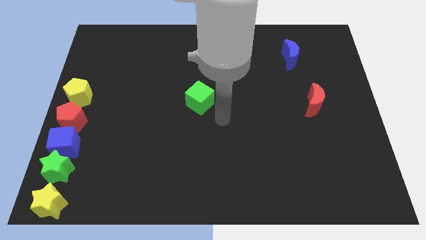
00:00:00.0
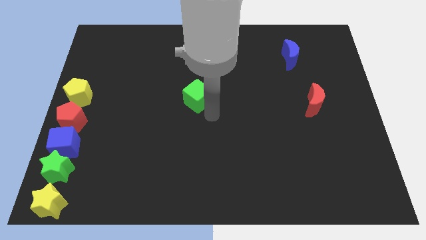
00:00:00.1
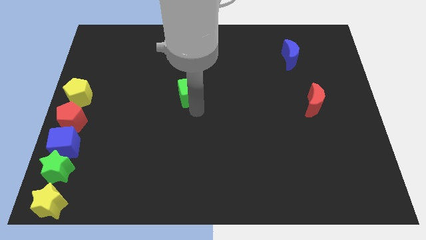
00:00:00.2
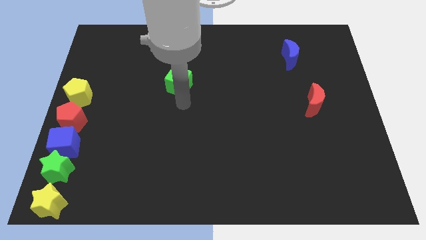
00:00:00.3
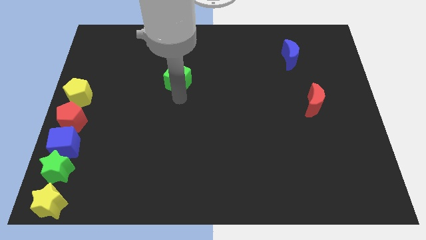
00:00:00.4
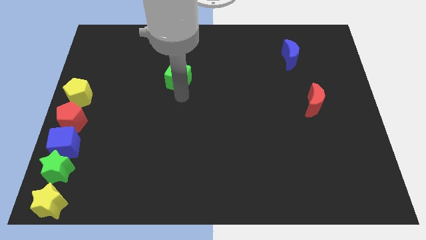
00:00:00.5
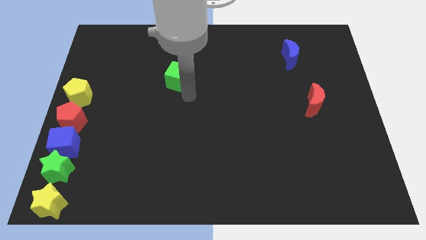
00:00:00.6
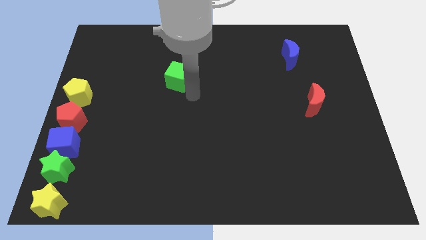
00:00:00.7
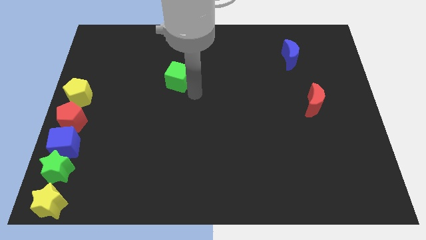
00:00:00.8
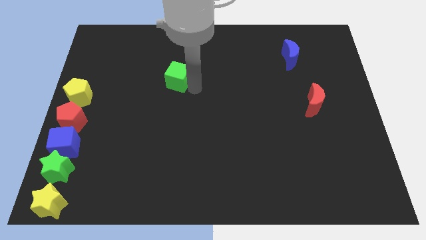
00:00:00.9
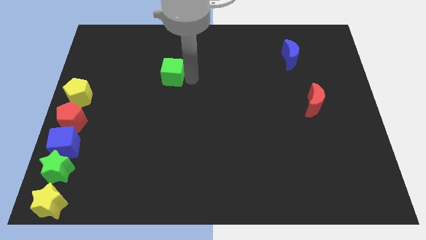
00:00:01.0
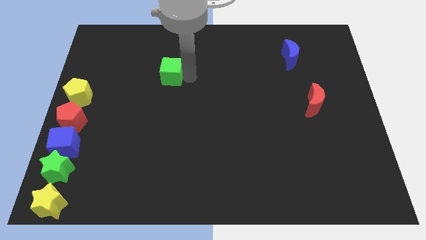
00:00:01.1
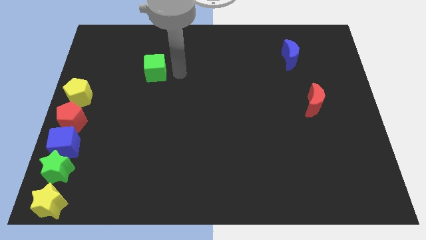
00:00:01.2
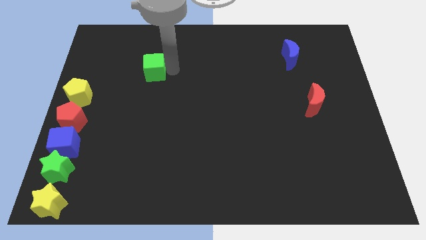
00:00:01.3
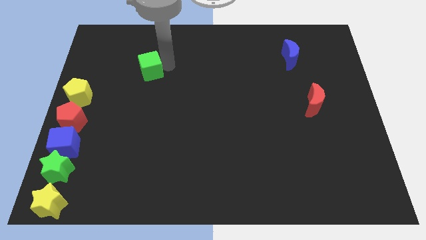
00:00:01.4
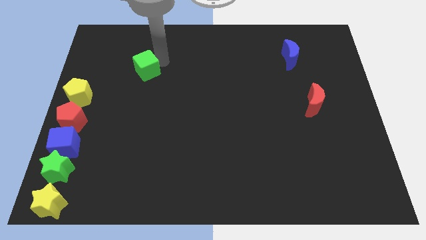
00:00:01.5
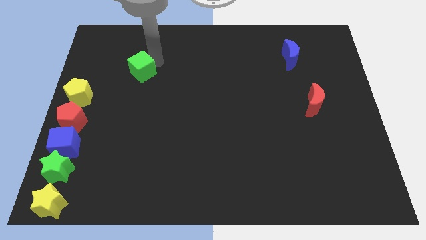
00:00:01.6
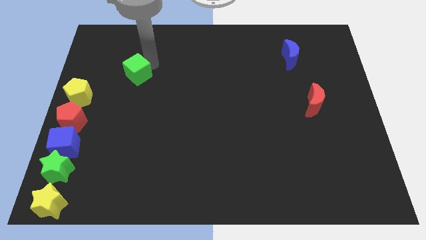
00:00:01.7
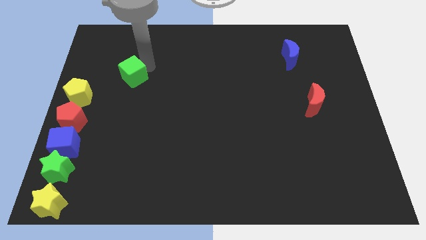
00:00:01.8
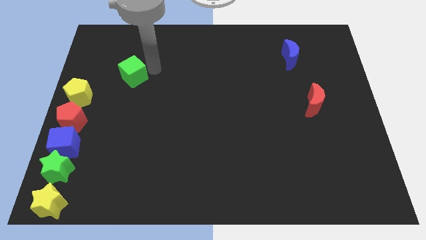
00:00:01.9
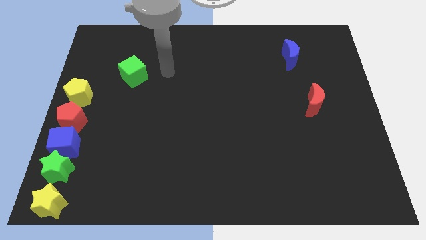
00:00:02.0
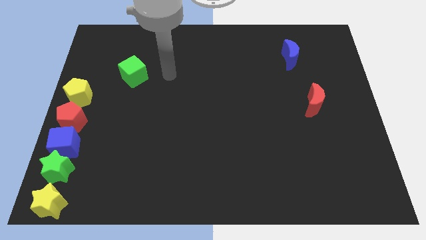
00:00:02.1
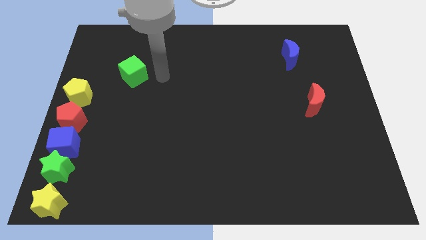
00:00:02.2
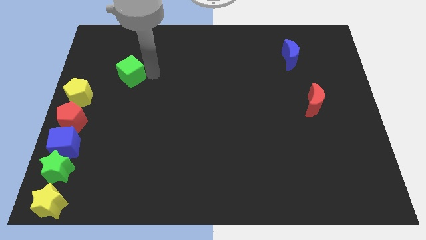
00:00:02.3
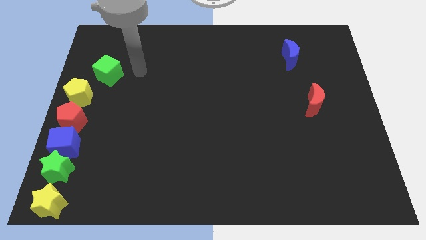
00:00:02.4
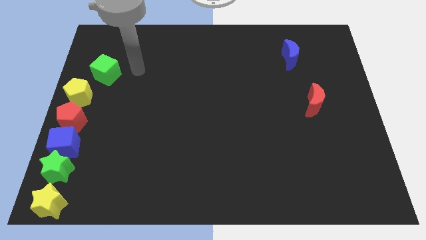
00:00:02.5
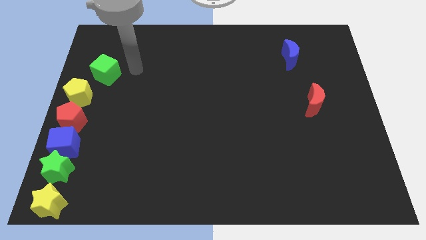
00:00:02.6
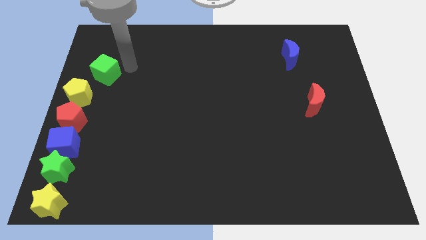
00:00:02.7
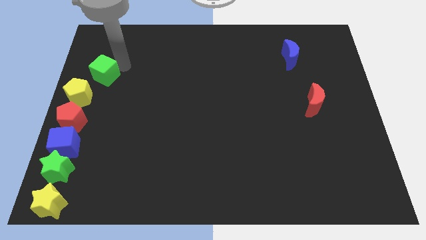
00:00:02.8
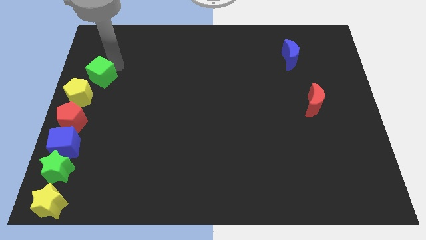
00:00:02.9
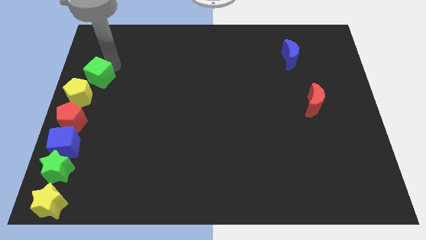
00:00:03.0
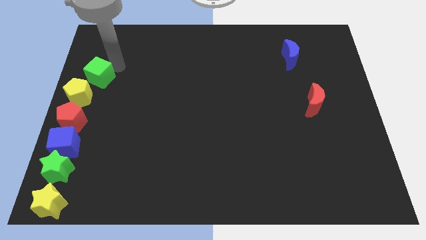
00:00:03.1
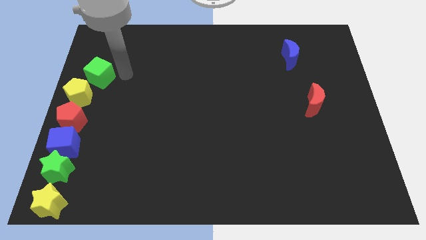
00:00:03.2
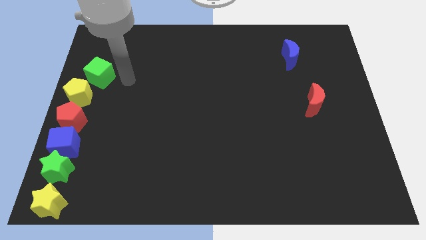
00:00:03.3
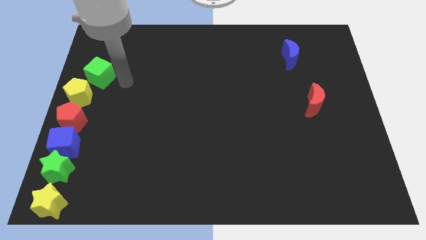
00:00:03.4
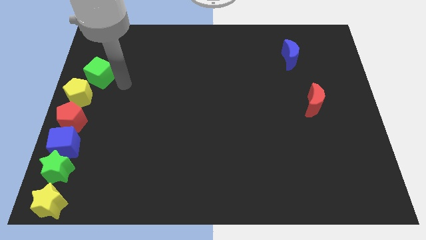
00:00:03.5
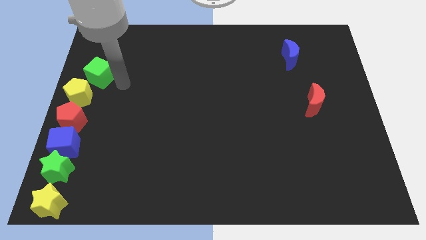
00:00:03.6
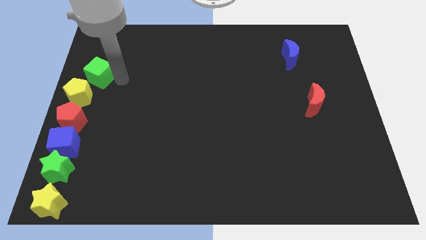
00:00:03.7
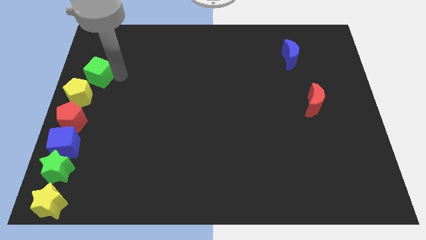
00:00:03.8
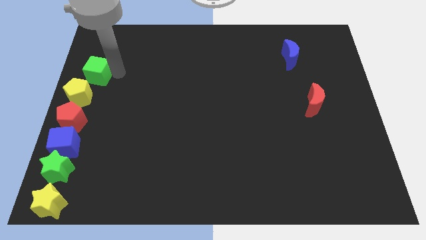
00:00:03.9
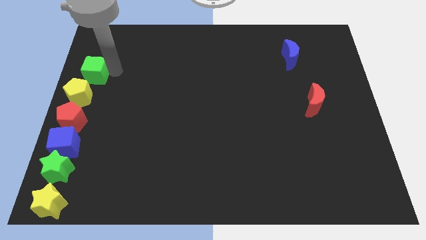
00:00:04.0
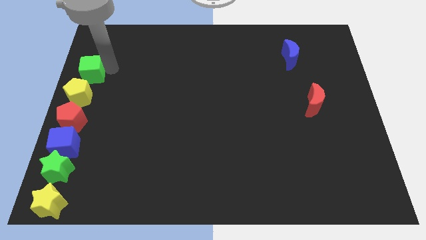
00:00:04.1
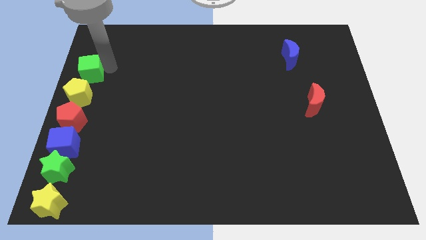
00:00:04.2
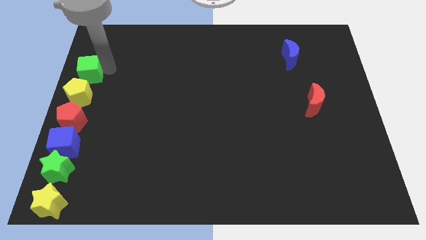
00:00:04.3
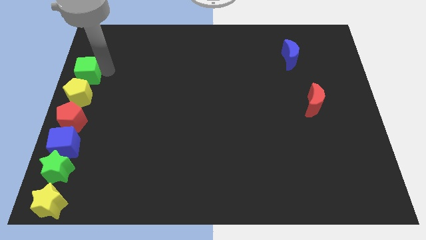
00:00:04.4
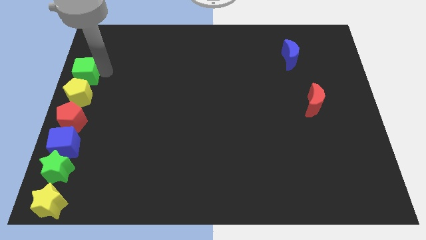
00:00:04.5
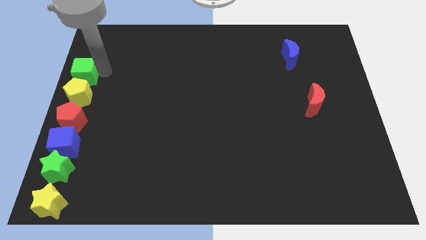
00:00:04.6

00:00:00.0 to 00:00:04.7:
push the green cube to the top of the yellow pentagon

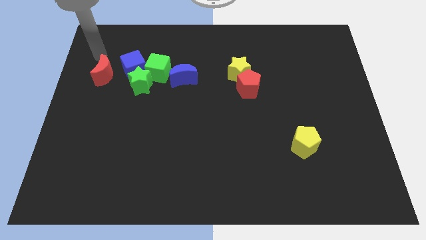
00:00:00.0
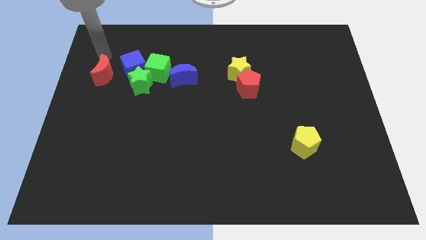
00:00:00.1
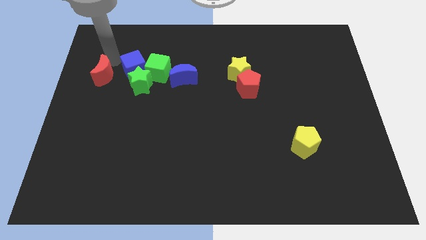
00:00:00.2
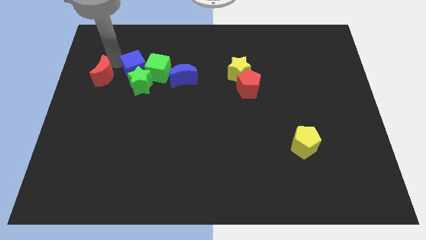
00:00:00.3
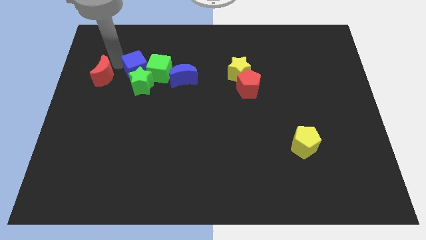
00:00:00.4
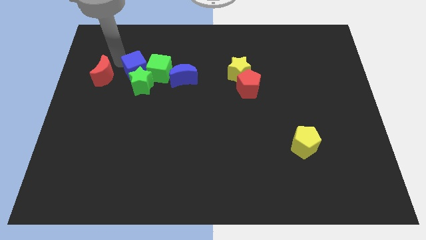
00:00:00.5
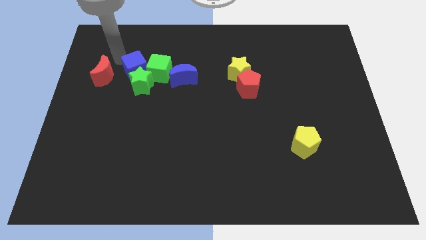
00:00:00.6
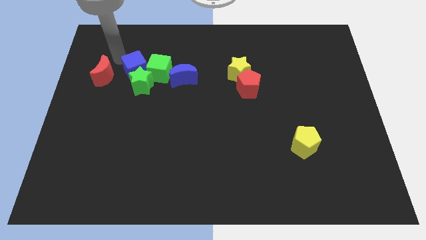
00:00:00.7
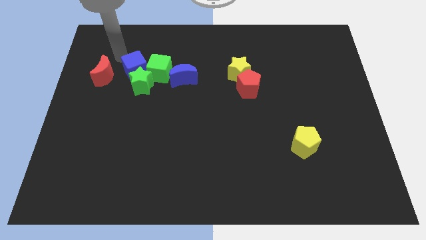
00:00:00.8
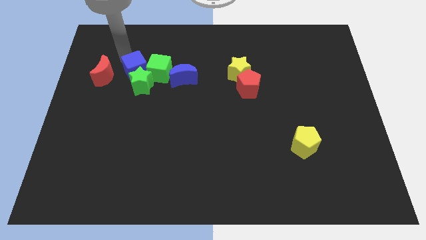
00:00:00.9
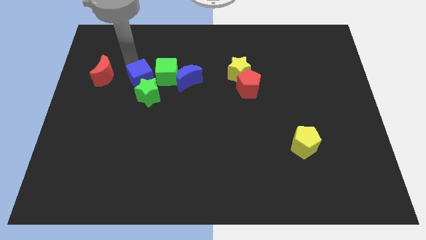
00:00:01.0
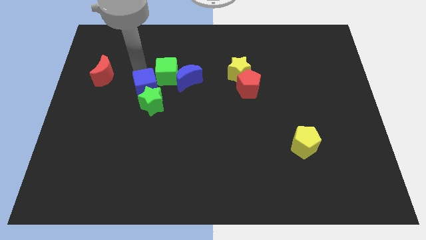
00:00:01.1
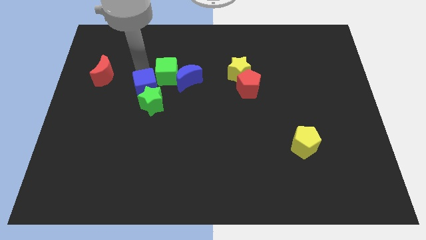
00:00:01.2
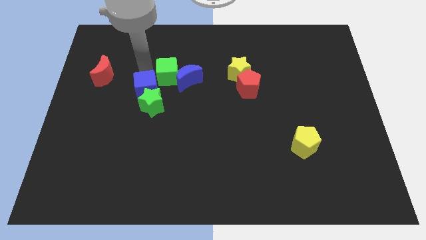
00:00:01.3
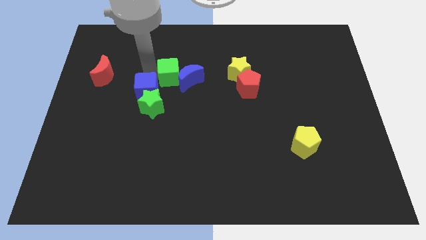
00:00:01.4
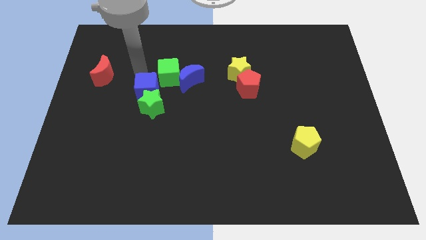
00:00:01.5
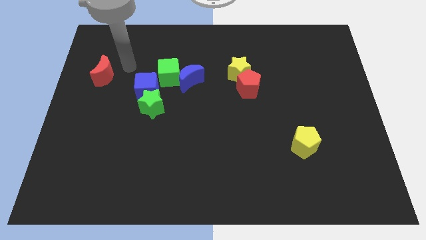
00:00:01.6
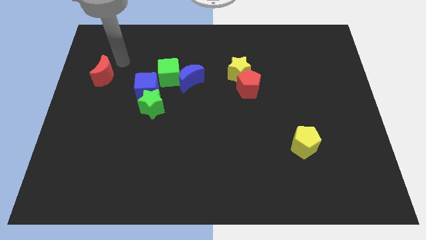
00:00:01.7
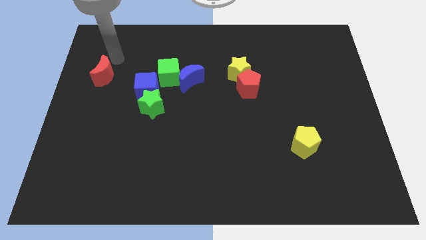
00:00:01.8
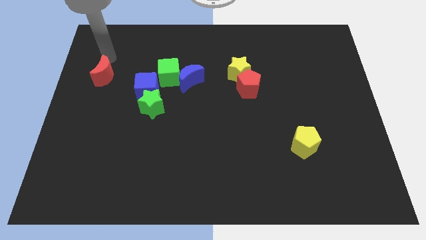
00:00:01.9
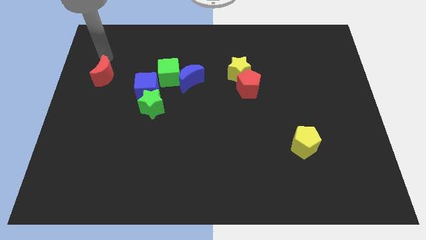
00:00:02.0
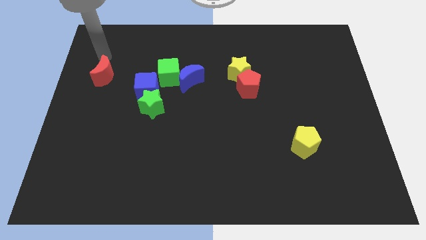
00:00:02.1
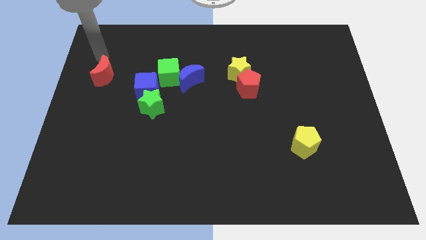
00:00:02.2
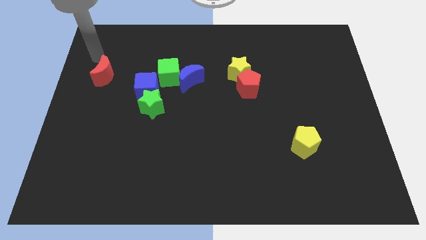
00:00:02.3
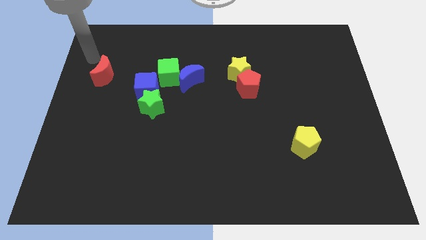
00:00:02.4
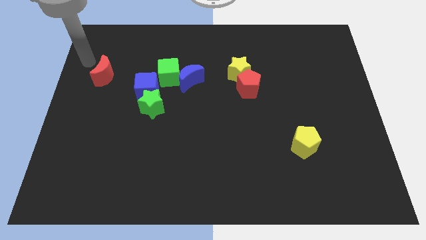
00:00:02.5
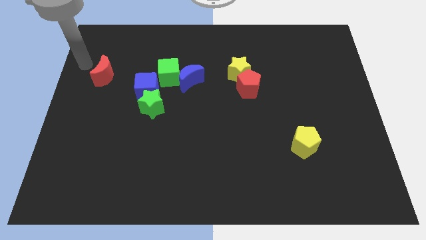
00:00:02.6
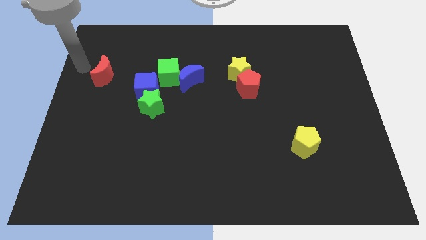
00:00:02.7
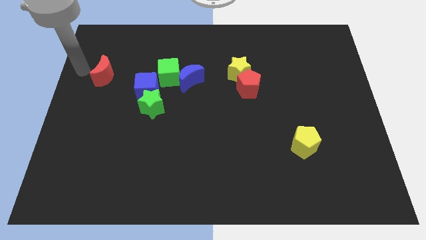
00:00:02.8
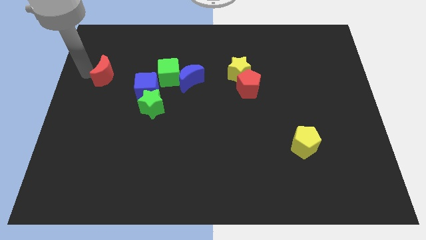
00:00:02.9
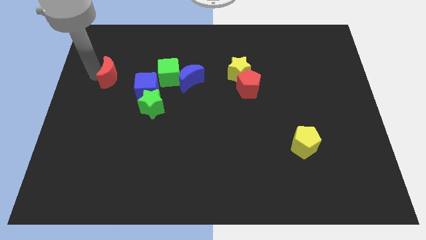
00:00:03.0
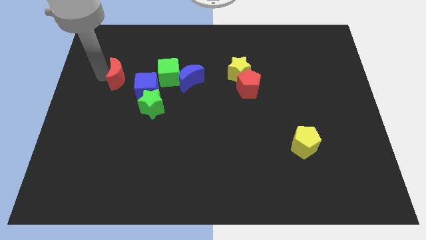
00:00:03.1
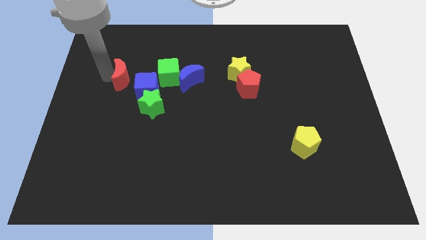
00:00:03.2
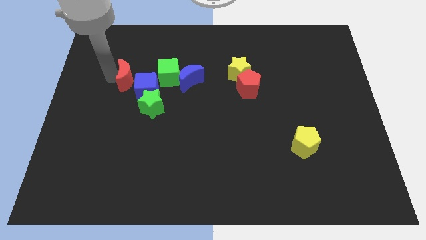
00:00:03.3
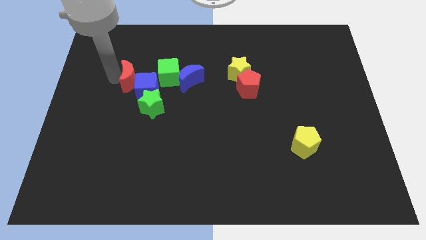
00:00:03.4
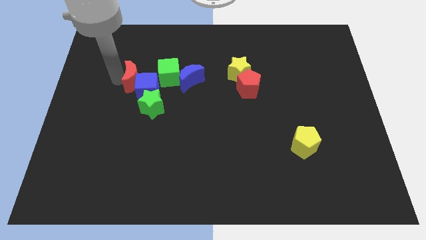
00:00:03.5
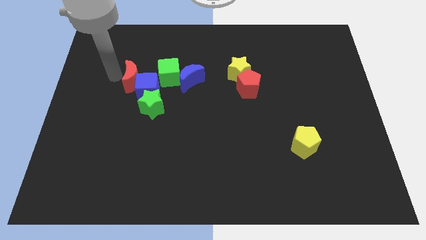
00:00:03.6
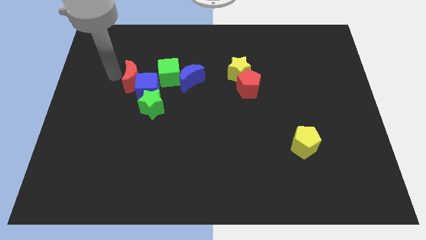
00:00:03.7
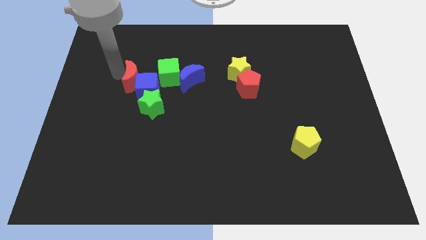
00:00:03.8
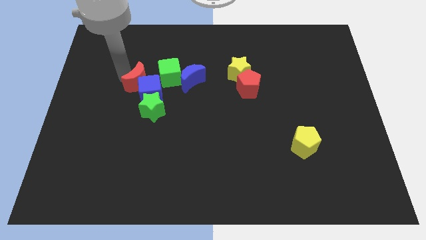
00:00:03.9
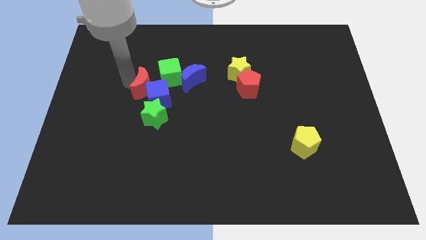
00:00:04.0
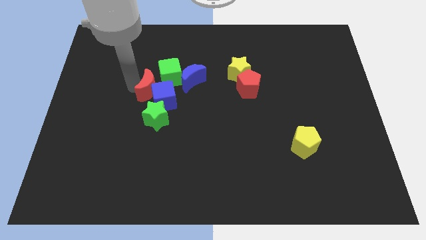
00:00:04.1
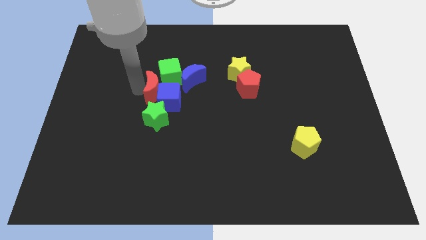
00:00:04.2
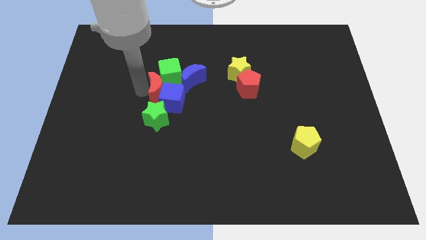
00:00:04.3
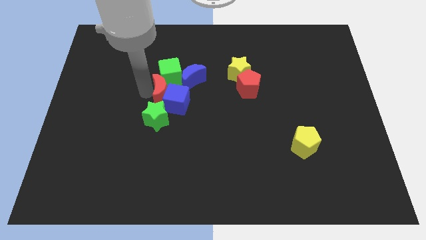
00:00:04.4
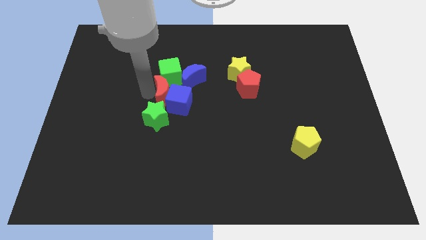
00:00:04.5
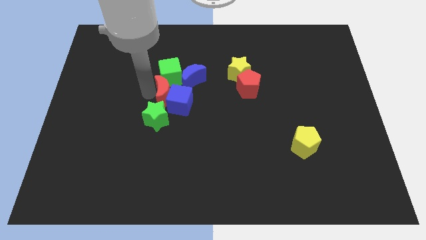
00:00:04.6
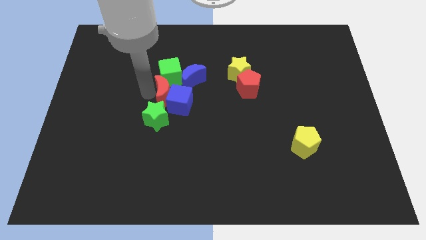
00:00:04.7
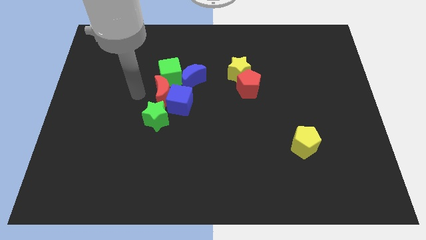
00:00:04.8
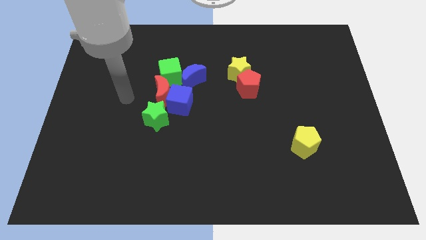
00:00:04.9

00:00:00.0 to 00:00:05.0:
move the blue cube beside the green star with the help of red crescent
